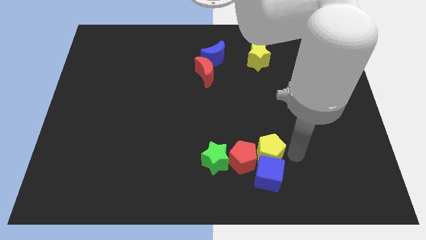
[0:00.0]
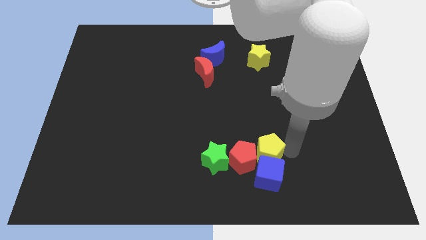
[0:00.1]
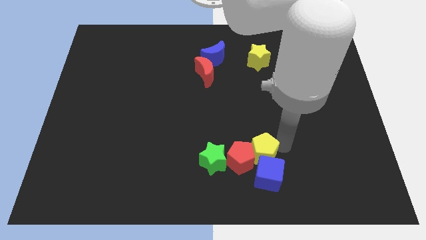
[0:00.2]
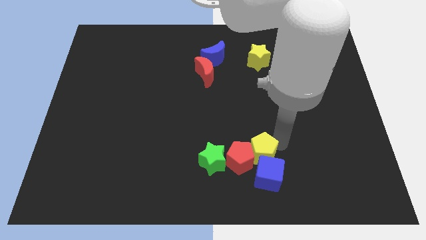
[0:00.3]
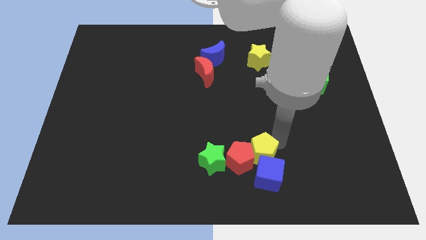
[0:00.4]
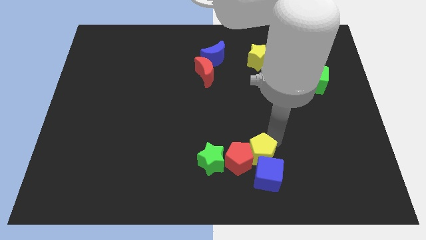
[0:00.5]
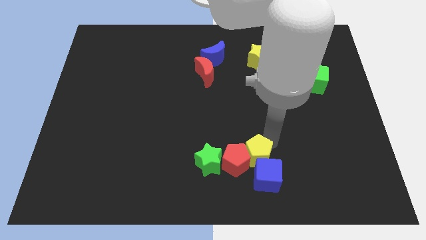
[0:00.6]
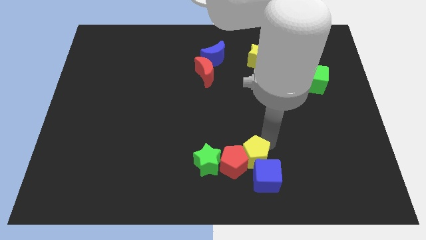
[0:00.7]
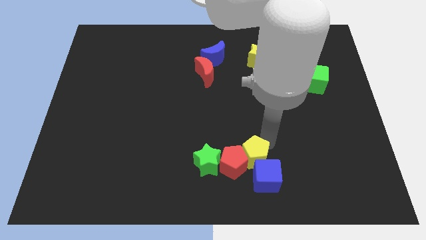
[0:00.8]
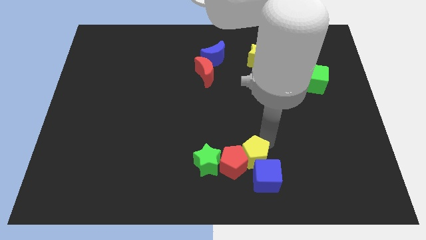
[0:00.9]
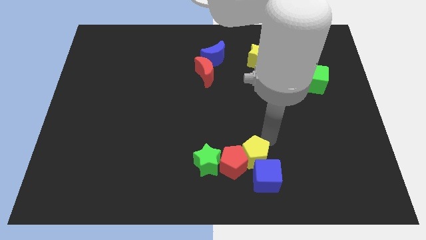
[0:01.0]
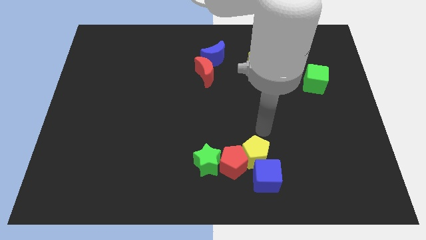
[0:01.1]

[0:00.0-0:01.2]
push the yellow star slightly into the red pentagon

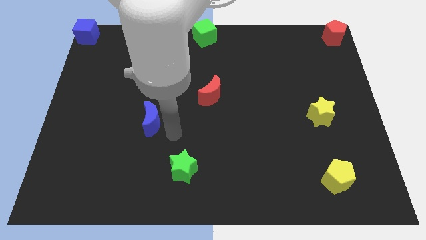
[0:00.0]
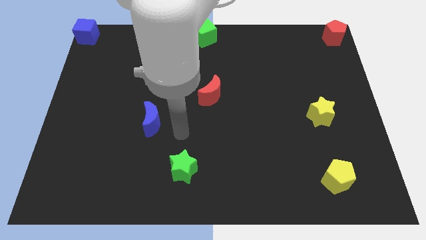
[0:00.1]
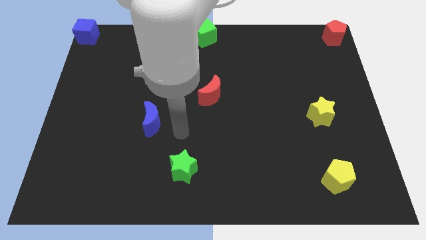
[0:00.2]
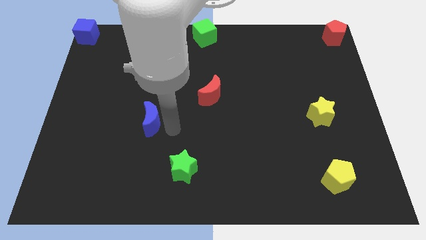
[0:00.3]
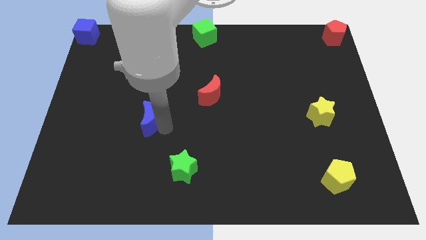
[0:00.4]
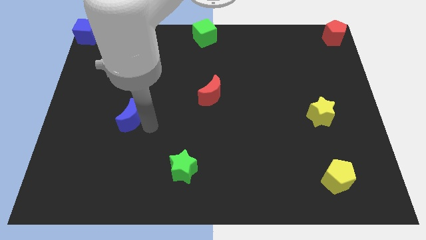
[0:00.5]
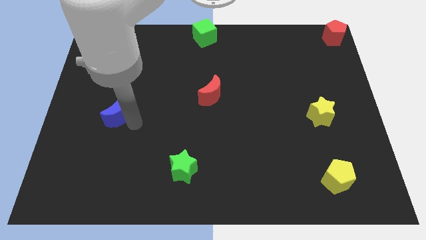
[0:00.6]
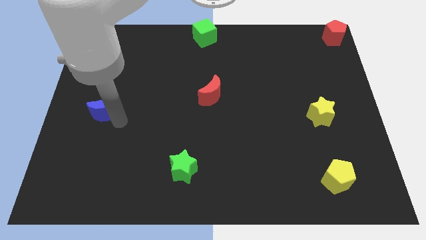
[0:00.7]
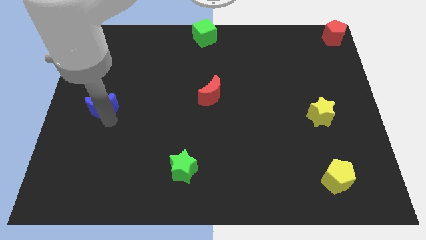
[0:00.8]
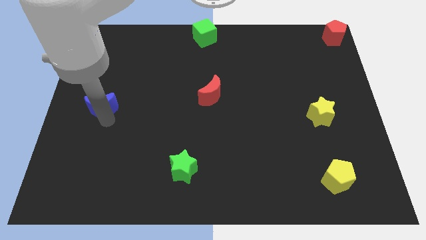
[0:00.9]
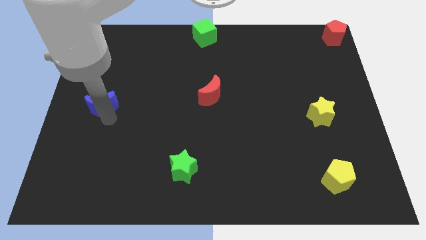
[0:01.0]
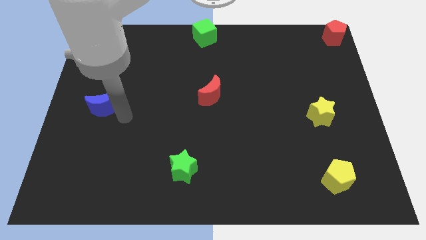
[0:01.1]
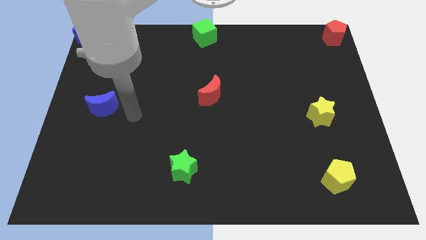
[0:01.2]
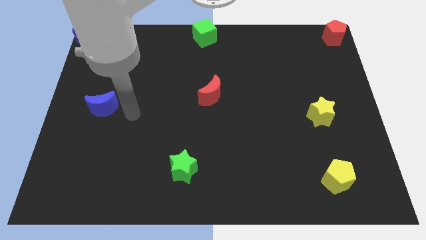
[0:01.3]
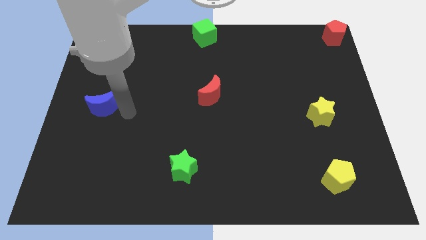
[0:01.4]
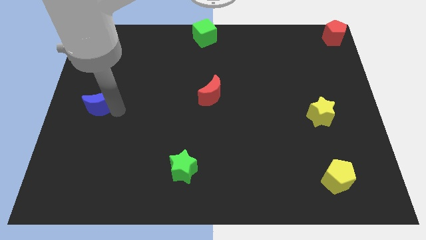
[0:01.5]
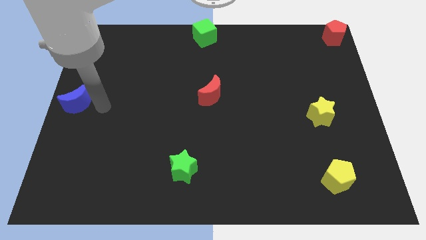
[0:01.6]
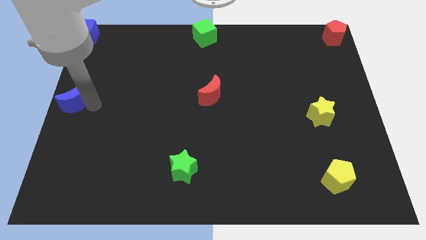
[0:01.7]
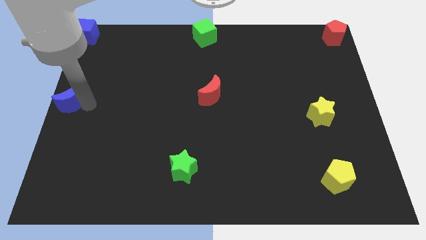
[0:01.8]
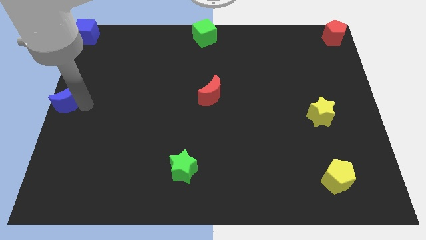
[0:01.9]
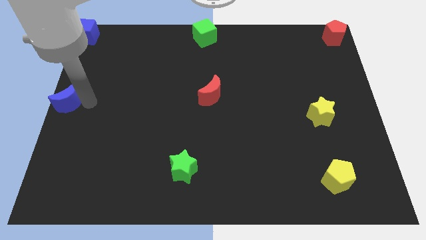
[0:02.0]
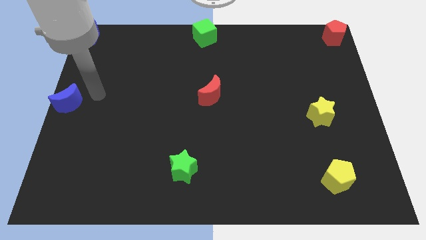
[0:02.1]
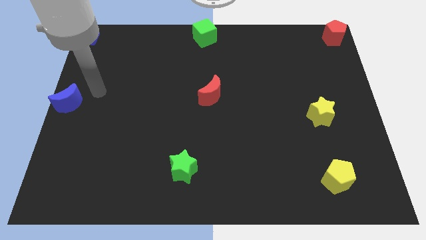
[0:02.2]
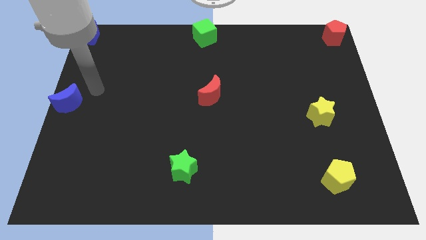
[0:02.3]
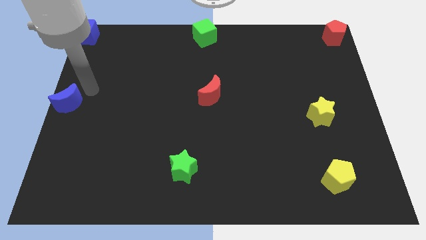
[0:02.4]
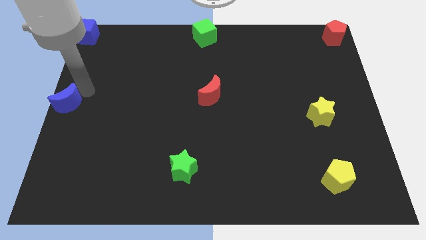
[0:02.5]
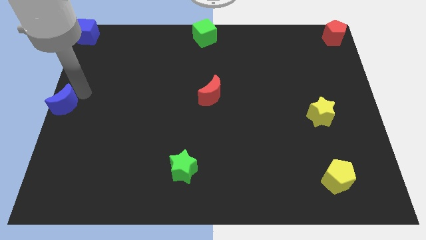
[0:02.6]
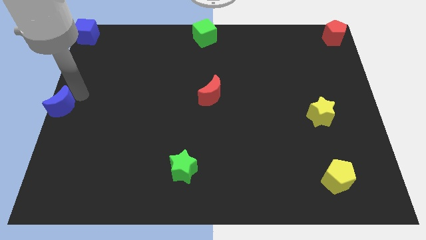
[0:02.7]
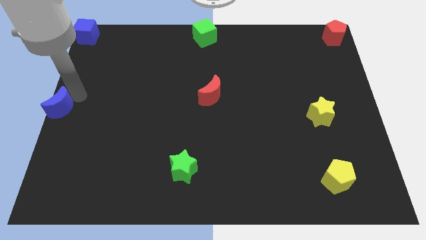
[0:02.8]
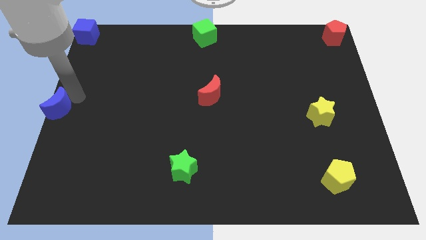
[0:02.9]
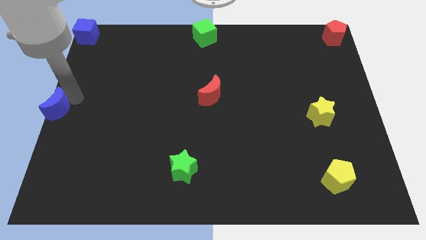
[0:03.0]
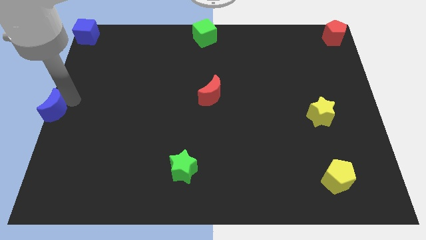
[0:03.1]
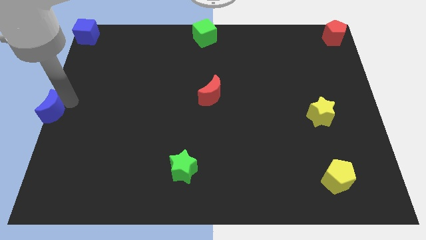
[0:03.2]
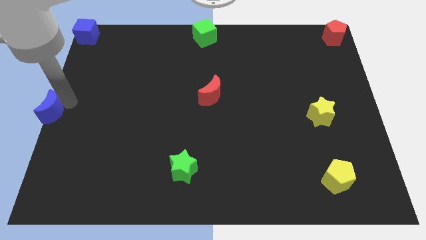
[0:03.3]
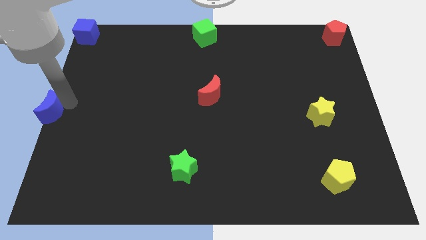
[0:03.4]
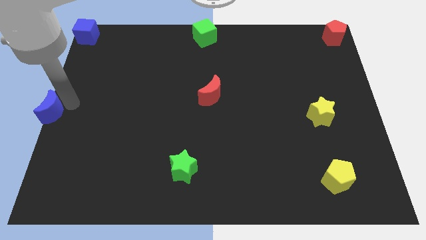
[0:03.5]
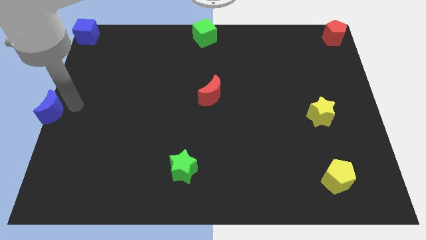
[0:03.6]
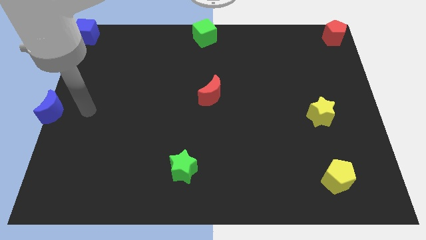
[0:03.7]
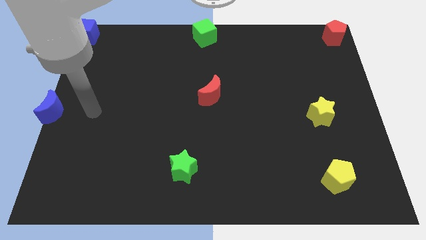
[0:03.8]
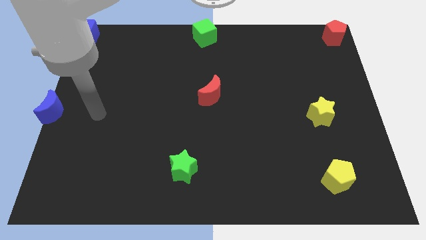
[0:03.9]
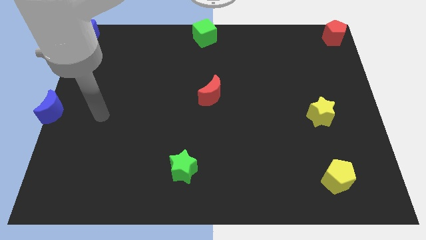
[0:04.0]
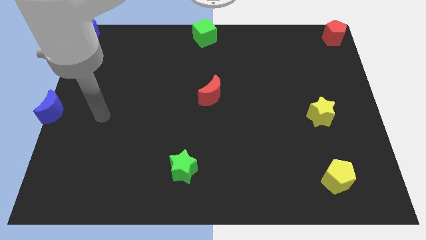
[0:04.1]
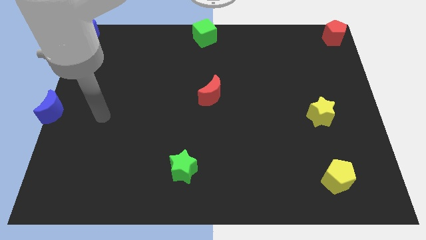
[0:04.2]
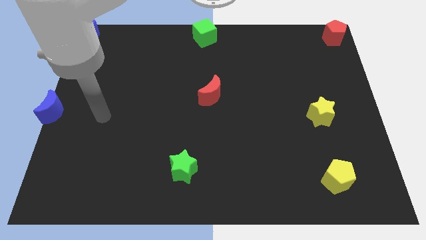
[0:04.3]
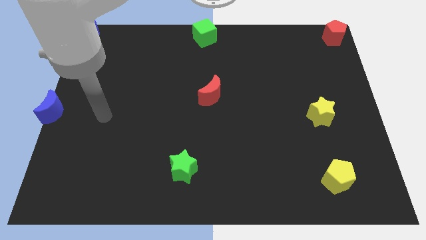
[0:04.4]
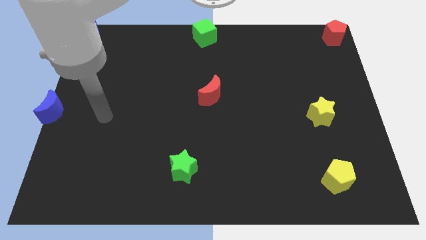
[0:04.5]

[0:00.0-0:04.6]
move the blue crescent to the center left of the board

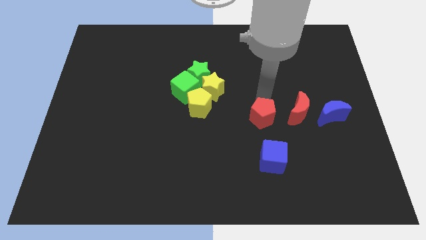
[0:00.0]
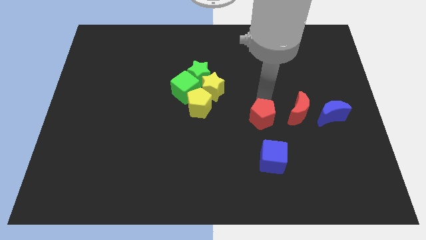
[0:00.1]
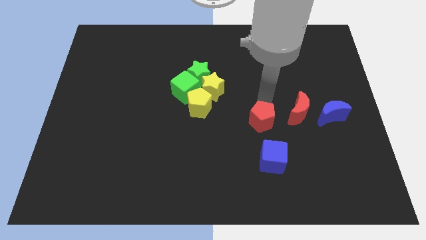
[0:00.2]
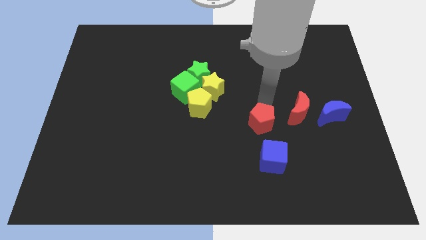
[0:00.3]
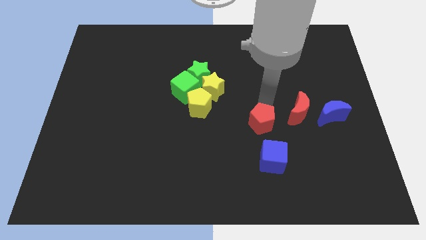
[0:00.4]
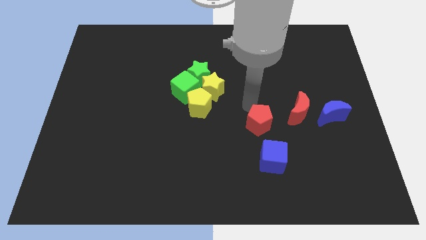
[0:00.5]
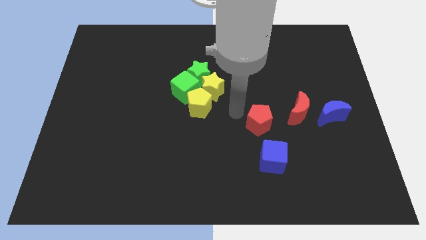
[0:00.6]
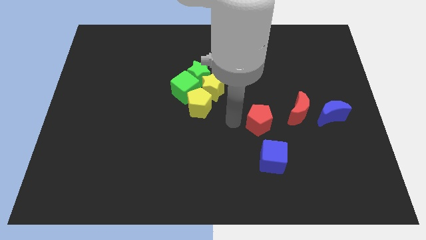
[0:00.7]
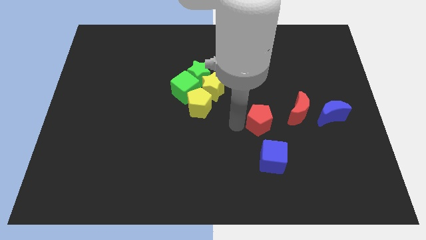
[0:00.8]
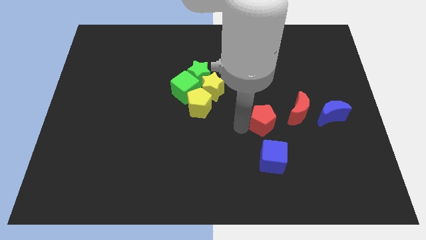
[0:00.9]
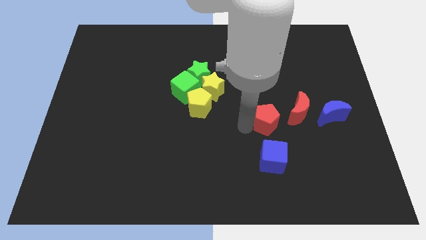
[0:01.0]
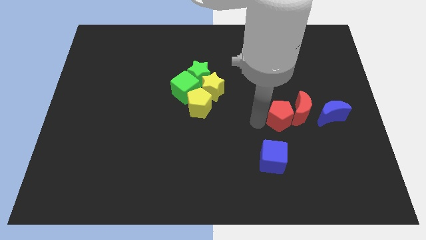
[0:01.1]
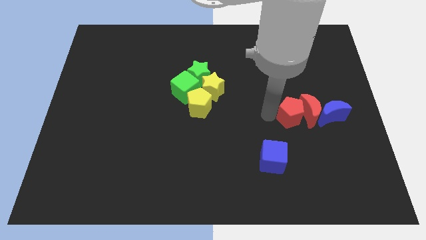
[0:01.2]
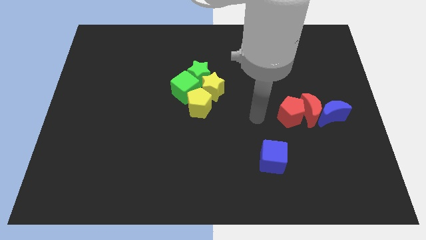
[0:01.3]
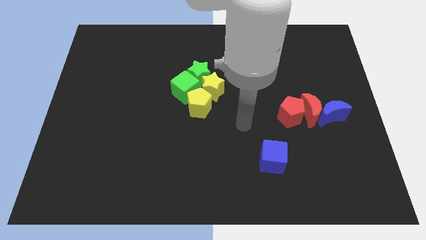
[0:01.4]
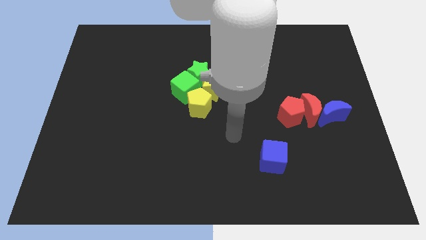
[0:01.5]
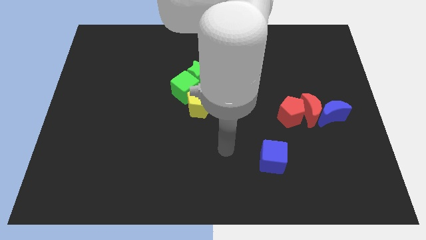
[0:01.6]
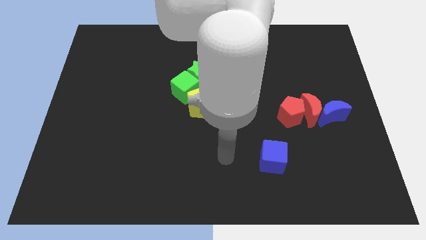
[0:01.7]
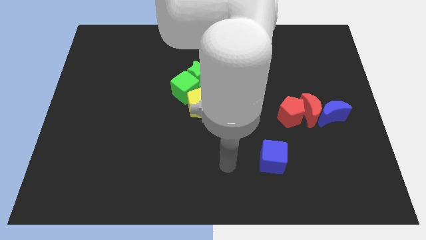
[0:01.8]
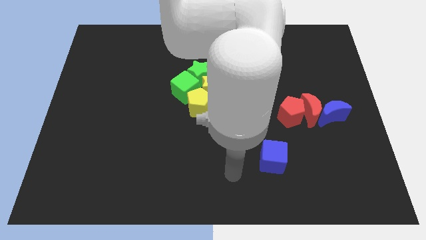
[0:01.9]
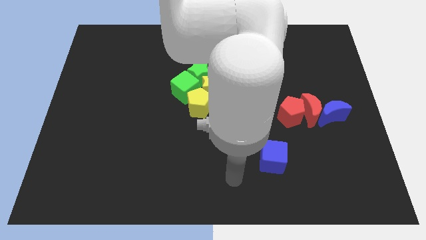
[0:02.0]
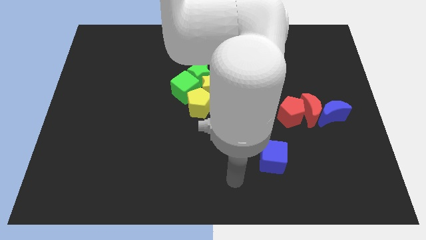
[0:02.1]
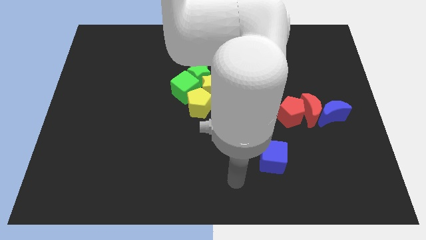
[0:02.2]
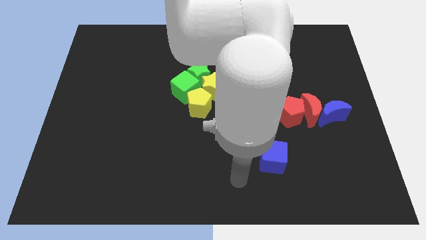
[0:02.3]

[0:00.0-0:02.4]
push the red pentagon into the red moon at the left

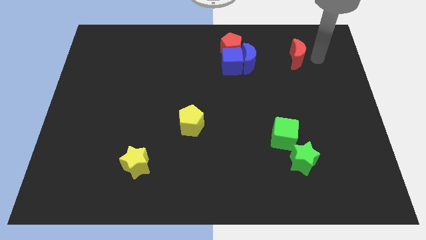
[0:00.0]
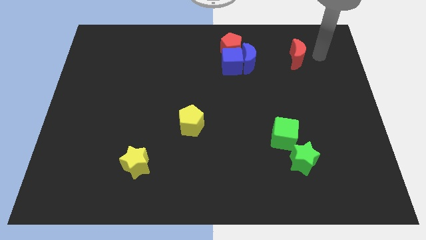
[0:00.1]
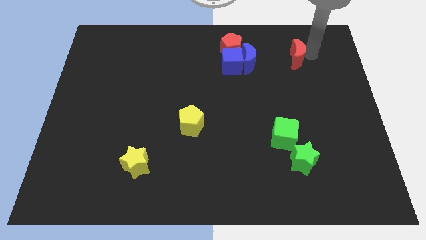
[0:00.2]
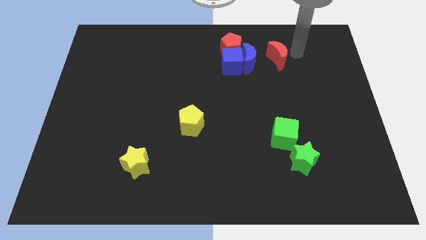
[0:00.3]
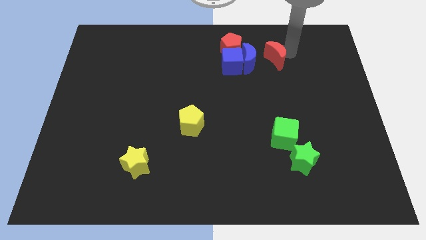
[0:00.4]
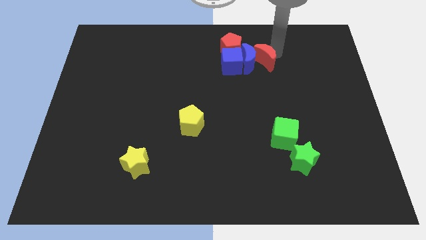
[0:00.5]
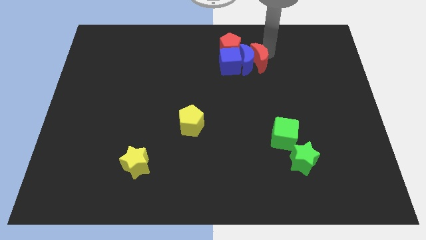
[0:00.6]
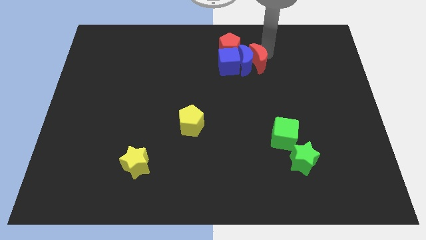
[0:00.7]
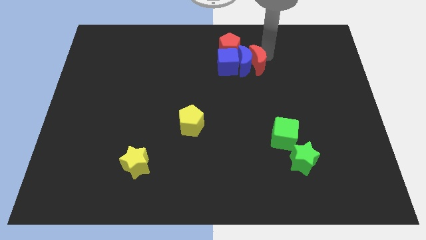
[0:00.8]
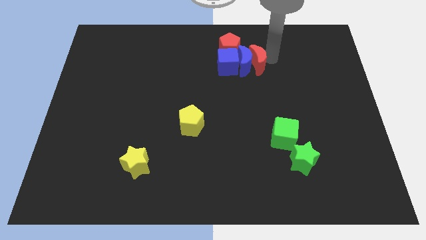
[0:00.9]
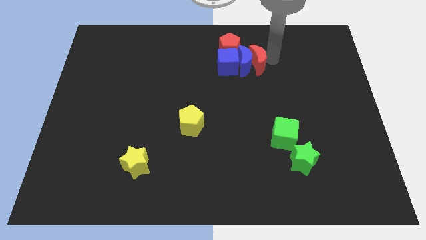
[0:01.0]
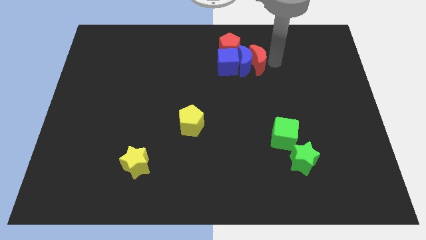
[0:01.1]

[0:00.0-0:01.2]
move the red moon to the right of the blue moon
